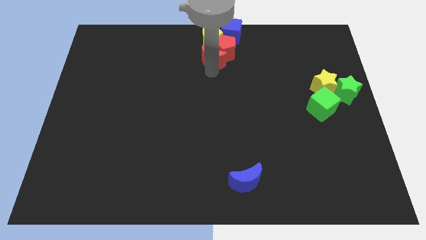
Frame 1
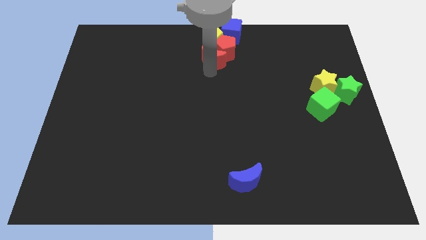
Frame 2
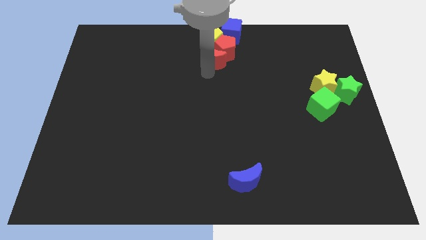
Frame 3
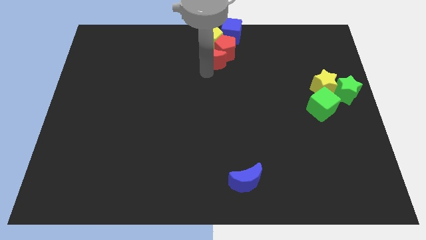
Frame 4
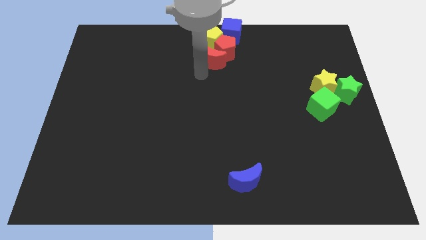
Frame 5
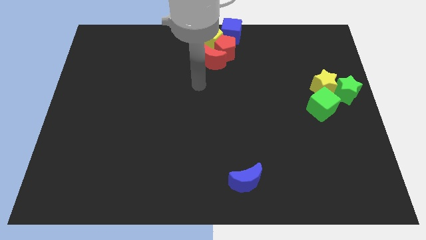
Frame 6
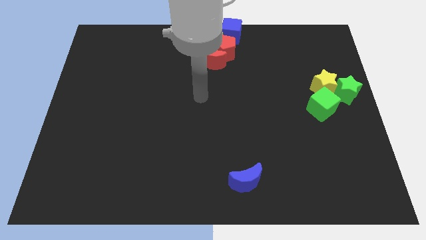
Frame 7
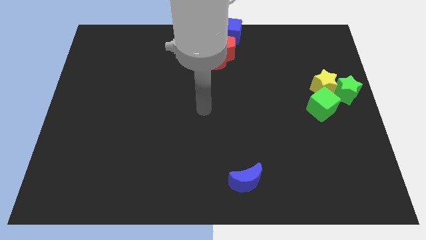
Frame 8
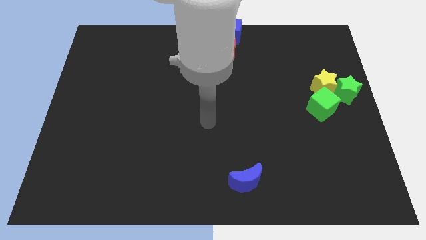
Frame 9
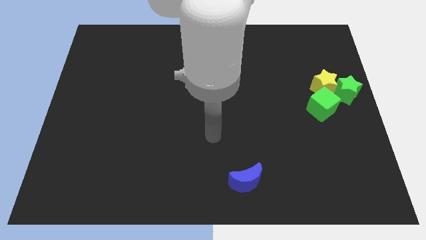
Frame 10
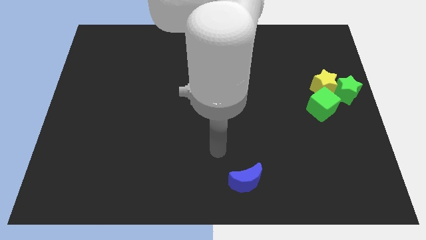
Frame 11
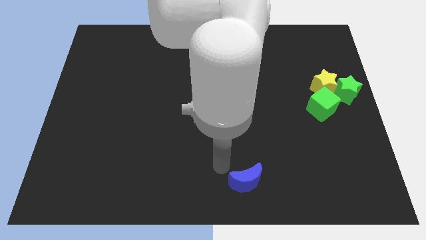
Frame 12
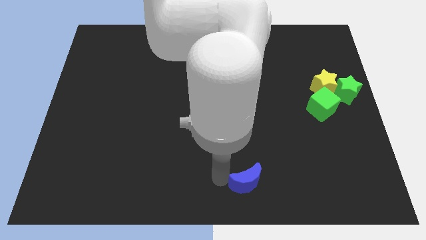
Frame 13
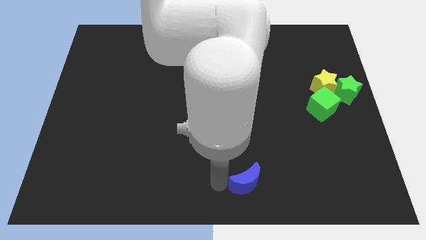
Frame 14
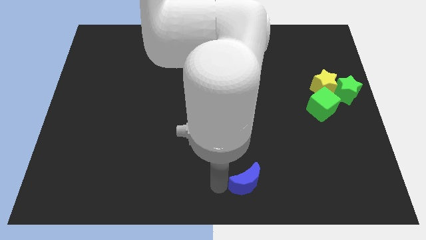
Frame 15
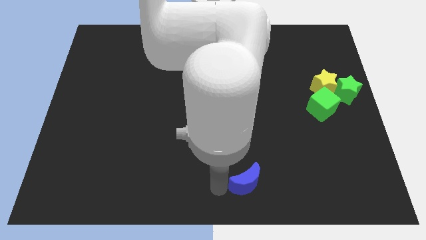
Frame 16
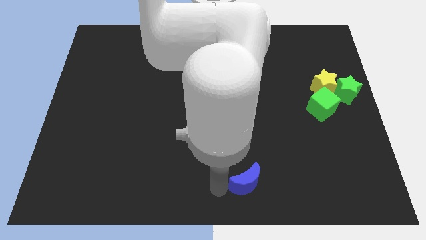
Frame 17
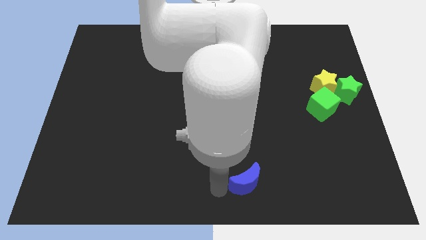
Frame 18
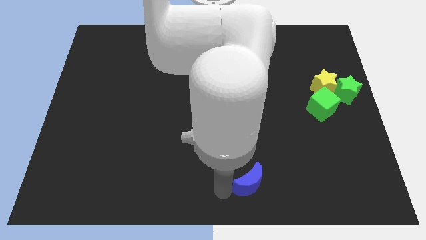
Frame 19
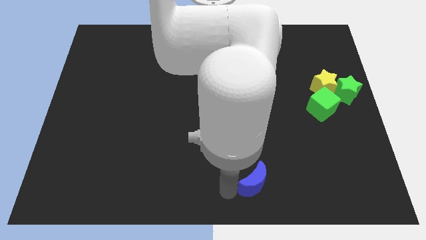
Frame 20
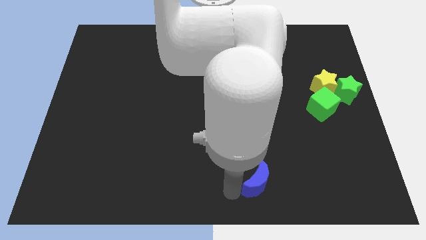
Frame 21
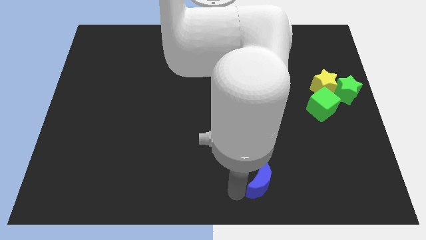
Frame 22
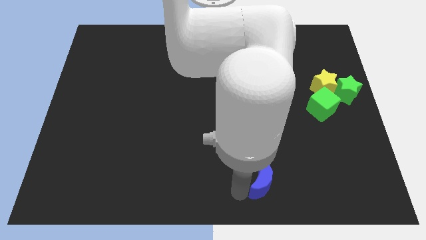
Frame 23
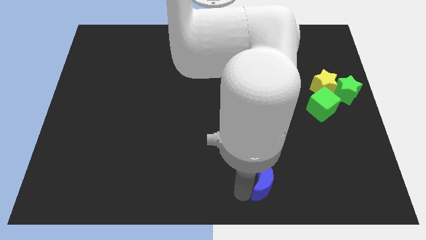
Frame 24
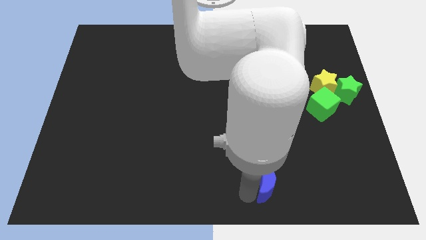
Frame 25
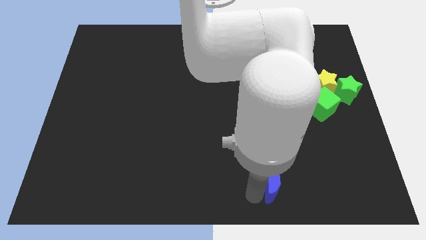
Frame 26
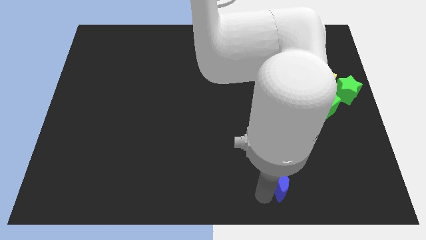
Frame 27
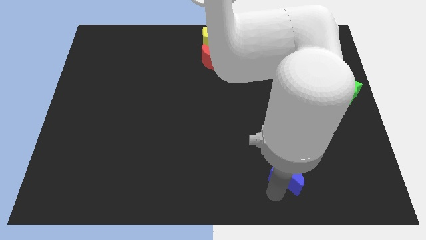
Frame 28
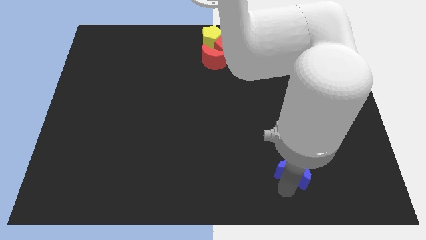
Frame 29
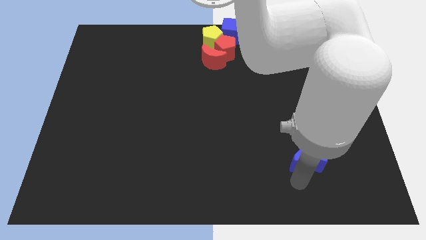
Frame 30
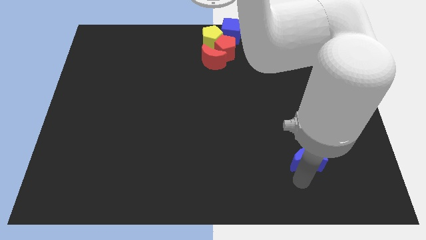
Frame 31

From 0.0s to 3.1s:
slide the blue moon slightly to the right

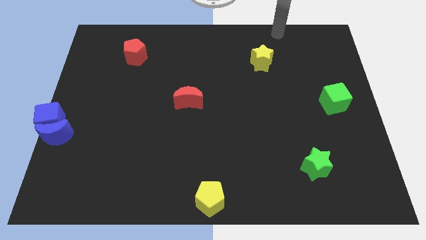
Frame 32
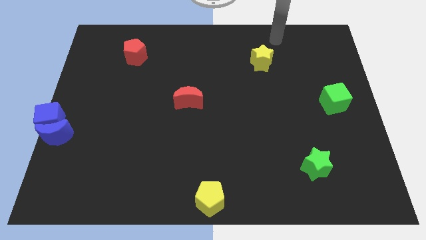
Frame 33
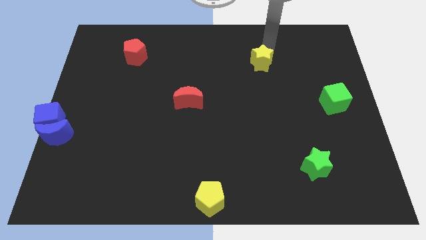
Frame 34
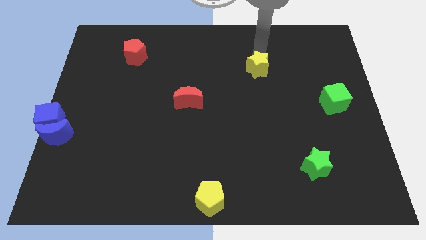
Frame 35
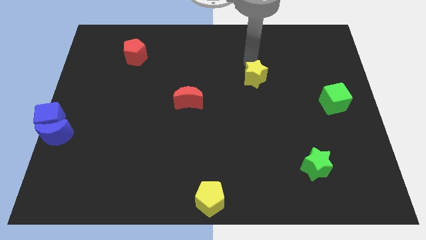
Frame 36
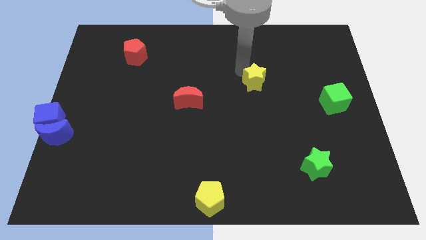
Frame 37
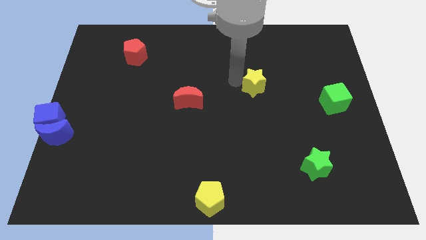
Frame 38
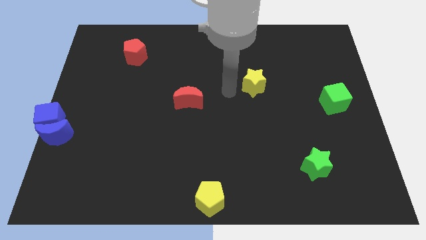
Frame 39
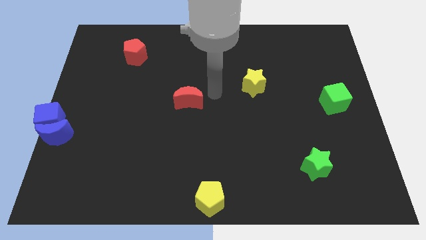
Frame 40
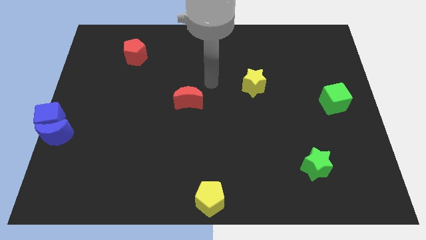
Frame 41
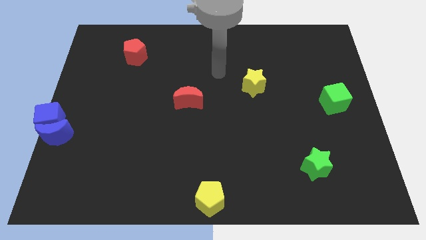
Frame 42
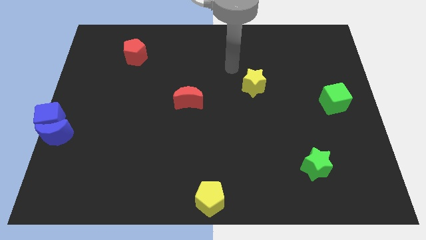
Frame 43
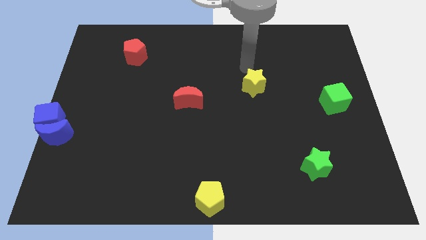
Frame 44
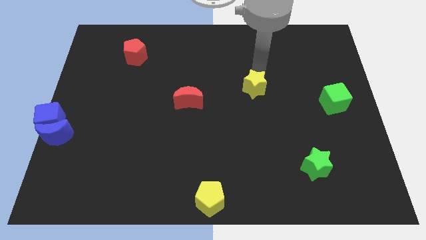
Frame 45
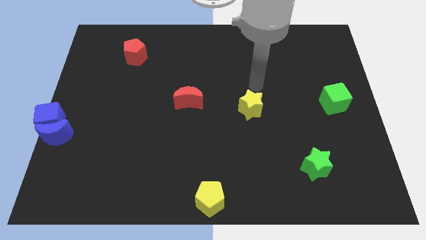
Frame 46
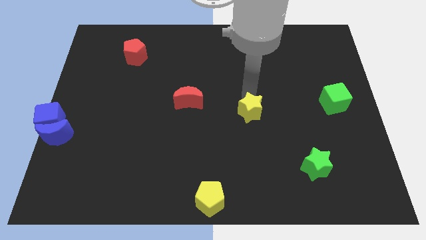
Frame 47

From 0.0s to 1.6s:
move the yellow star to the left of the green cube

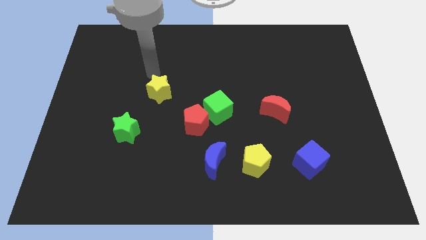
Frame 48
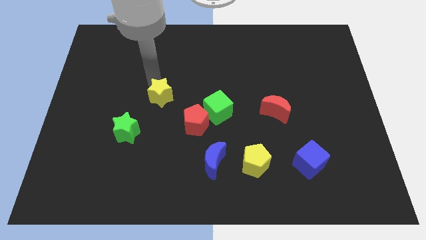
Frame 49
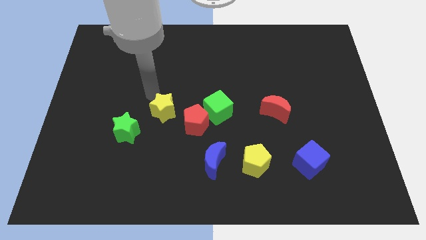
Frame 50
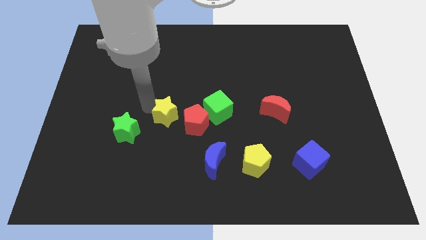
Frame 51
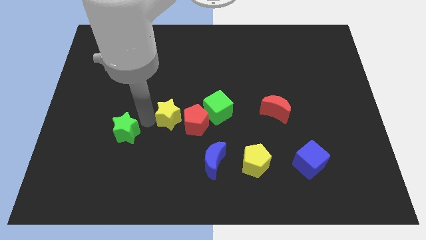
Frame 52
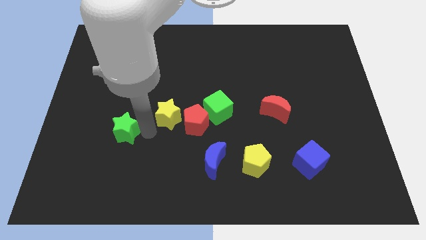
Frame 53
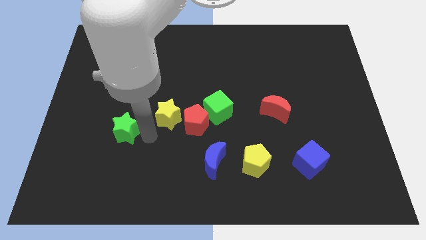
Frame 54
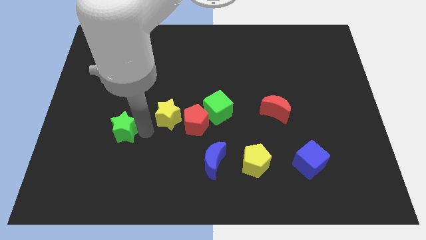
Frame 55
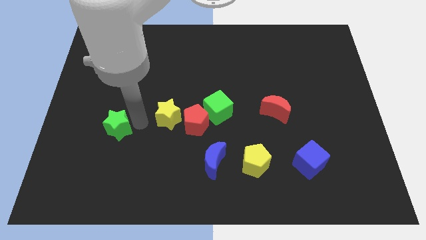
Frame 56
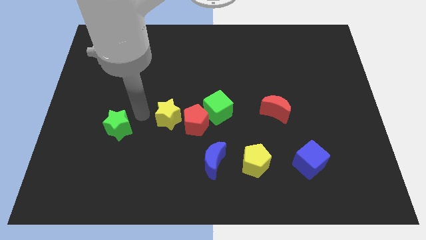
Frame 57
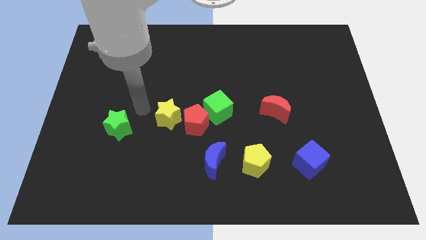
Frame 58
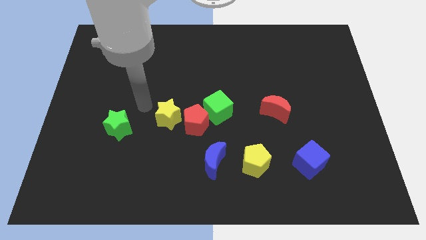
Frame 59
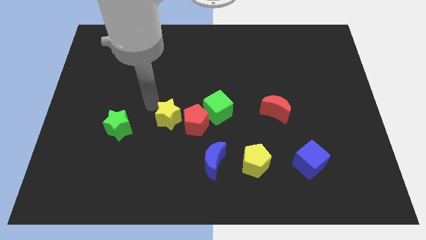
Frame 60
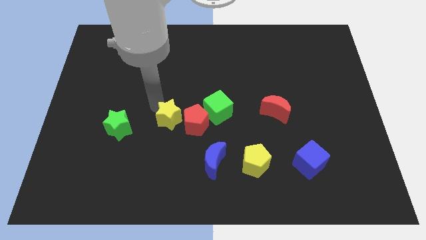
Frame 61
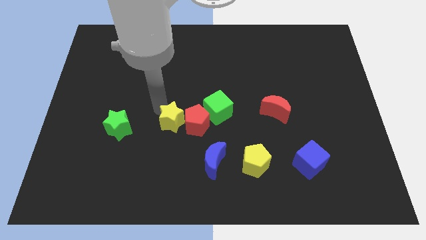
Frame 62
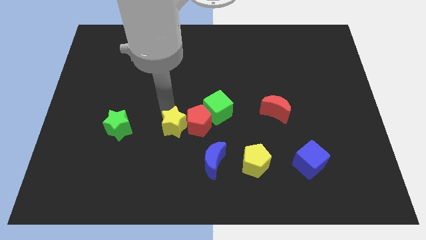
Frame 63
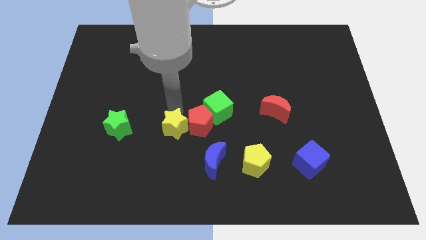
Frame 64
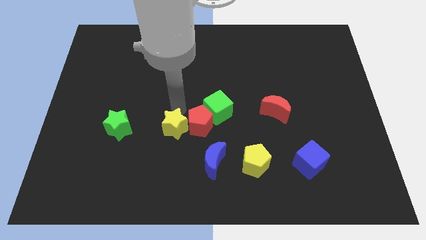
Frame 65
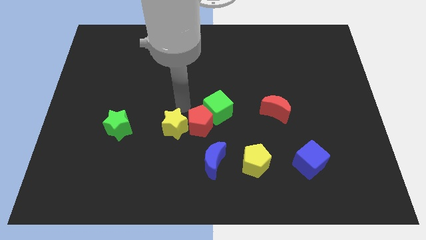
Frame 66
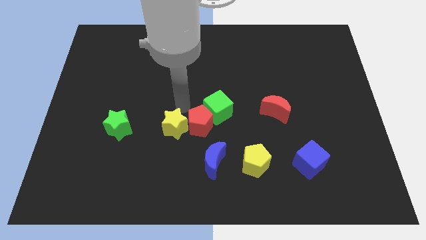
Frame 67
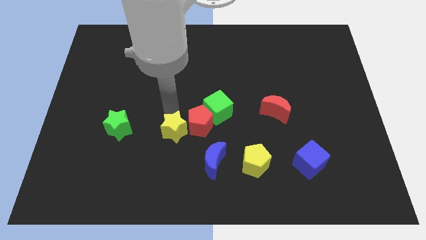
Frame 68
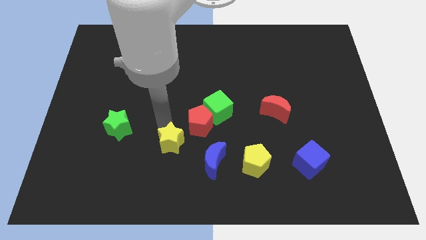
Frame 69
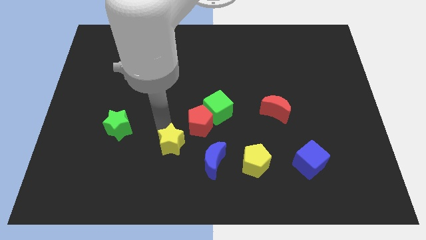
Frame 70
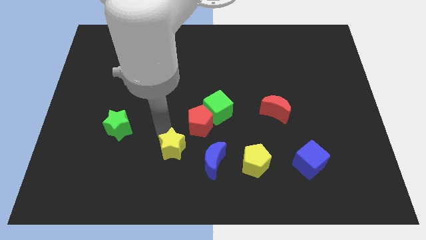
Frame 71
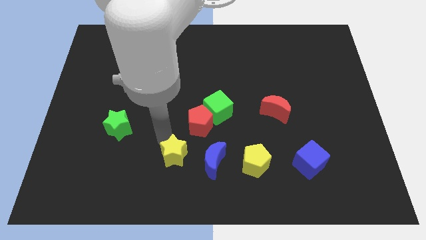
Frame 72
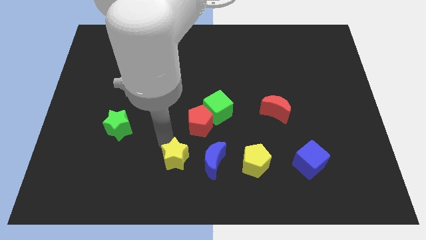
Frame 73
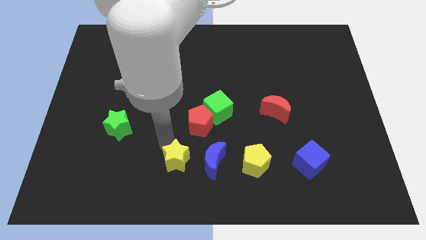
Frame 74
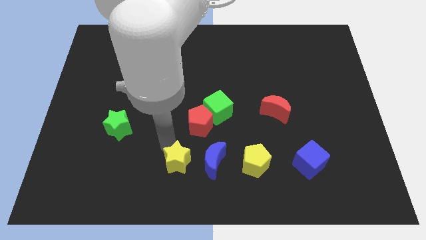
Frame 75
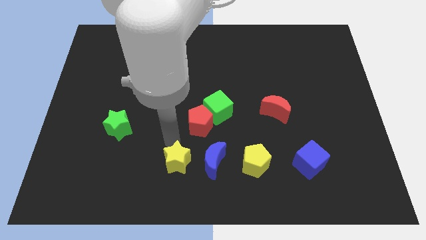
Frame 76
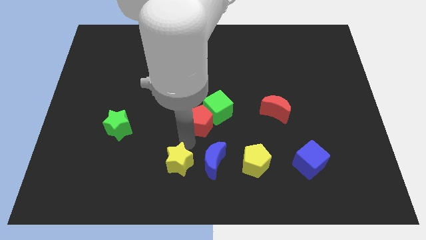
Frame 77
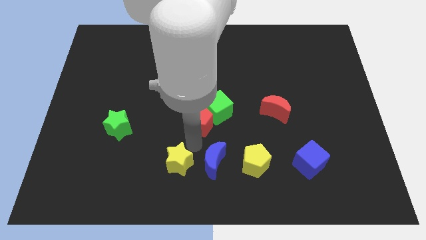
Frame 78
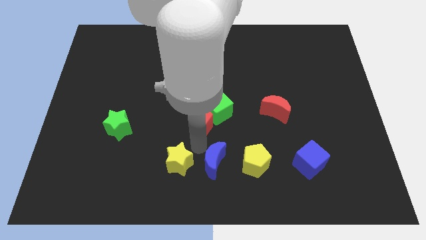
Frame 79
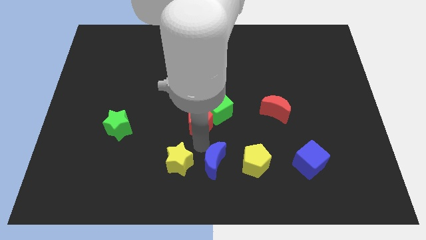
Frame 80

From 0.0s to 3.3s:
push the yellow star to the left side of the horizontal line of blocks

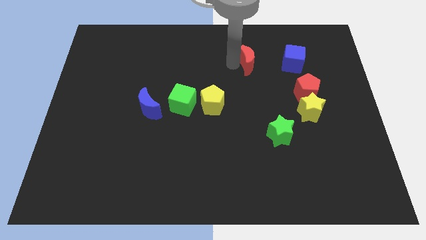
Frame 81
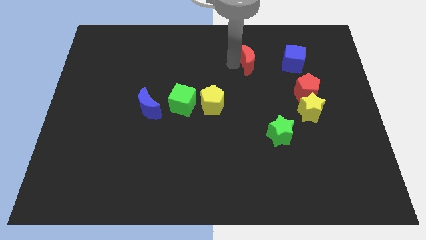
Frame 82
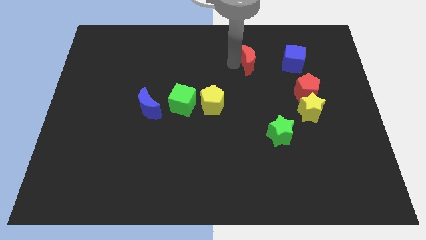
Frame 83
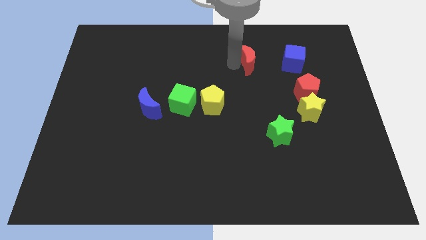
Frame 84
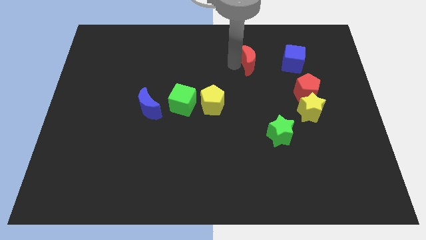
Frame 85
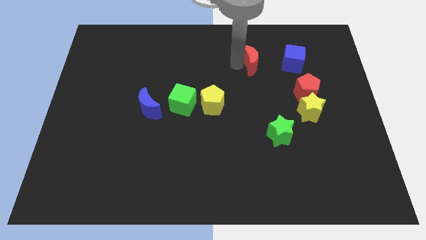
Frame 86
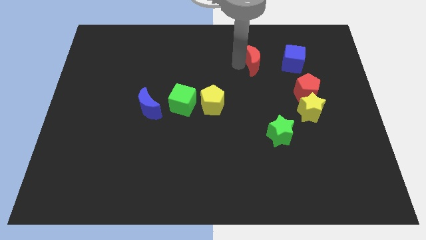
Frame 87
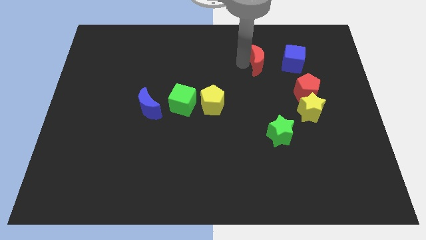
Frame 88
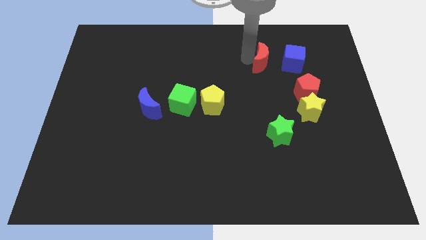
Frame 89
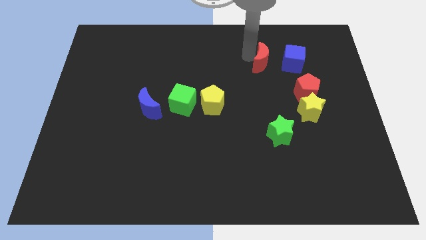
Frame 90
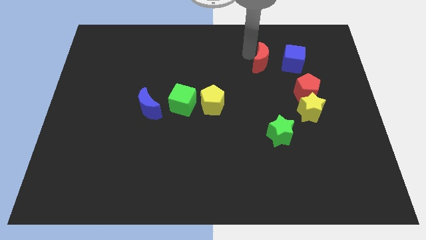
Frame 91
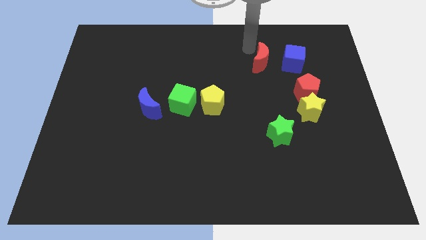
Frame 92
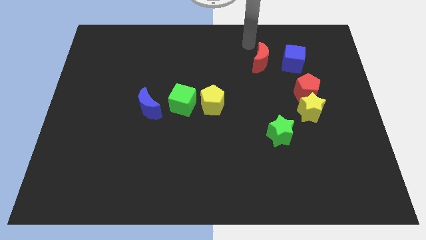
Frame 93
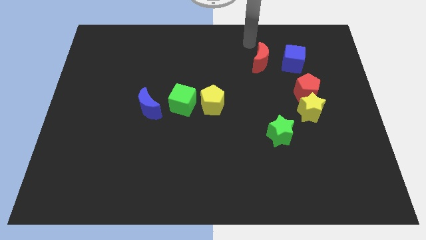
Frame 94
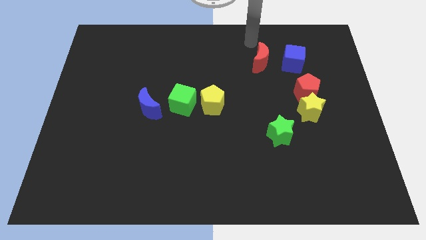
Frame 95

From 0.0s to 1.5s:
place the red moon to the left of the blue moon
